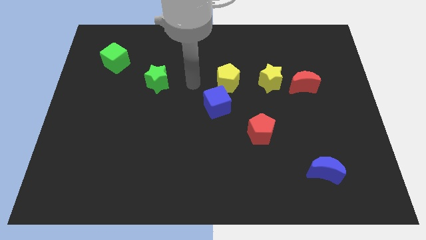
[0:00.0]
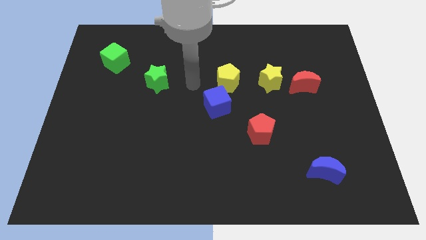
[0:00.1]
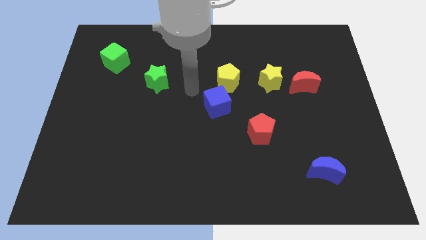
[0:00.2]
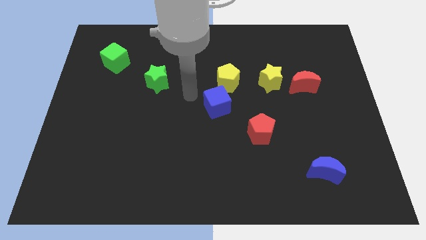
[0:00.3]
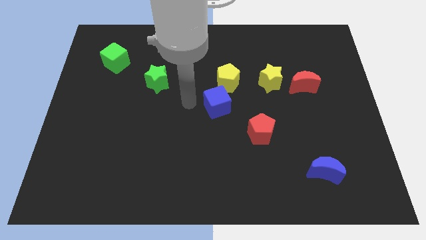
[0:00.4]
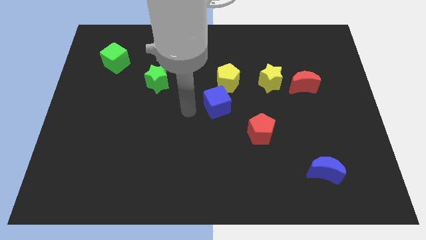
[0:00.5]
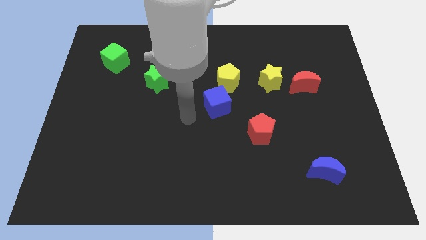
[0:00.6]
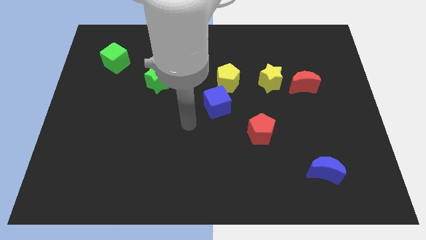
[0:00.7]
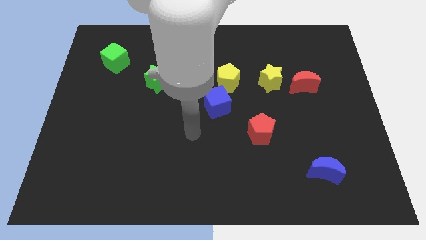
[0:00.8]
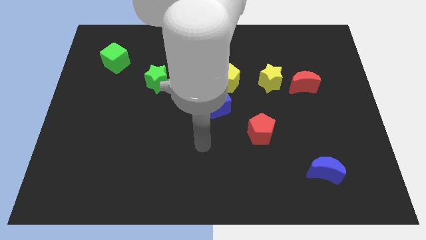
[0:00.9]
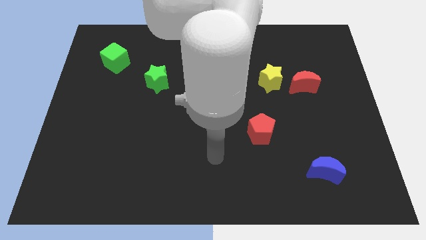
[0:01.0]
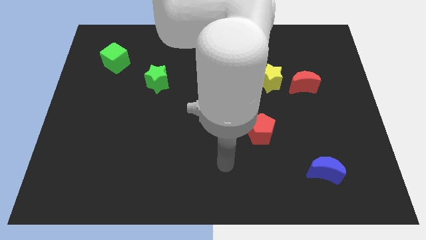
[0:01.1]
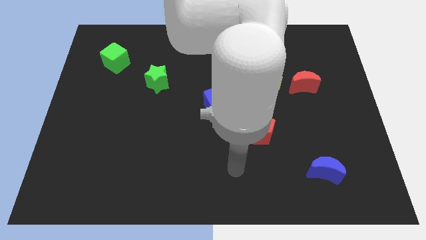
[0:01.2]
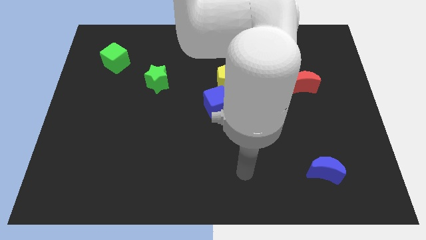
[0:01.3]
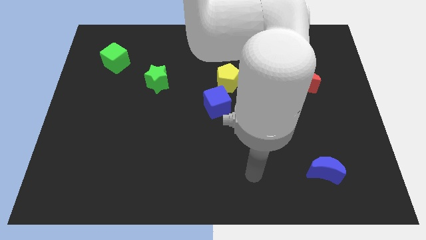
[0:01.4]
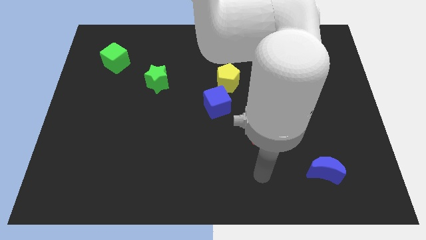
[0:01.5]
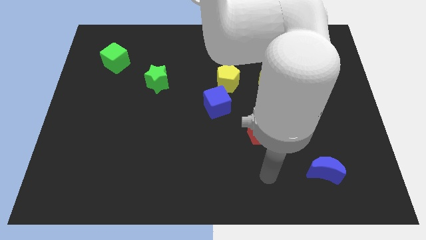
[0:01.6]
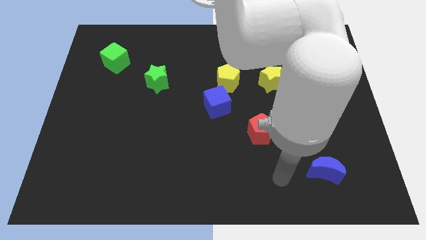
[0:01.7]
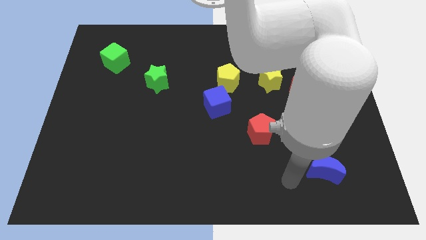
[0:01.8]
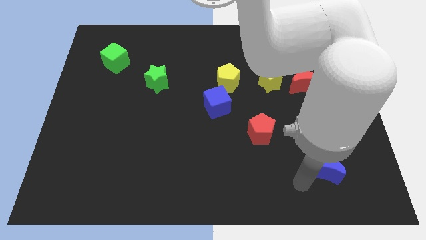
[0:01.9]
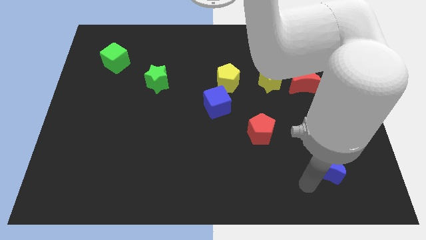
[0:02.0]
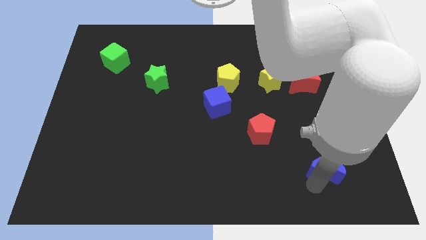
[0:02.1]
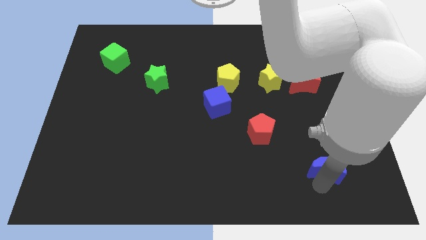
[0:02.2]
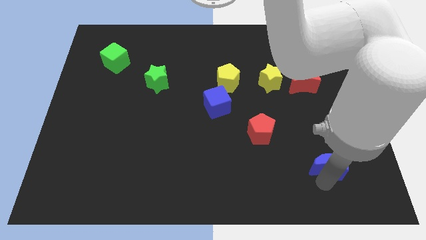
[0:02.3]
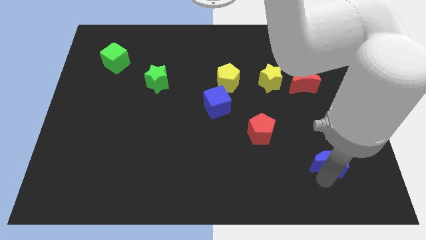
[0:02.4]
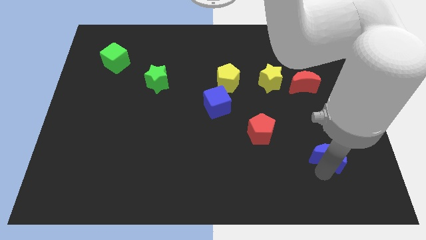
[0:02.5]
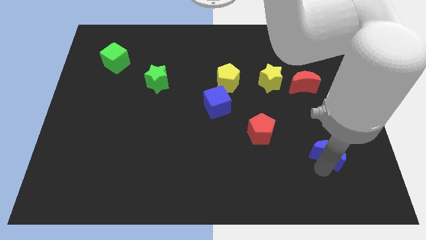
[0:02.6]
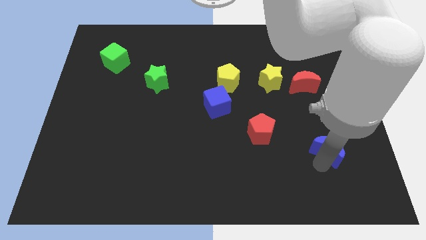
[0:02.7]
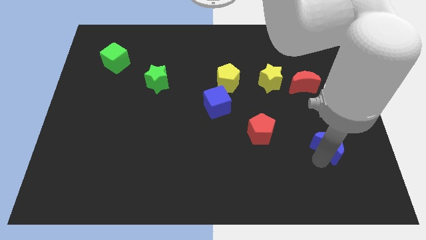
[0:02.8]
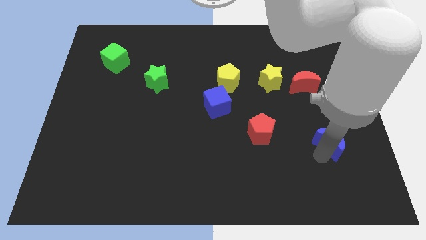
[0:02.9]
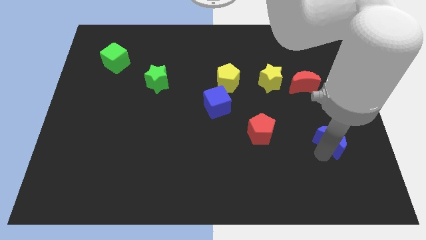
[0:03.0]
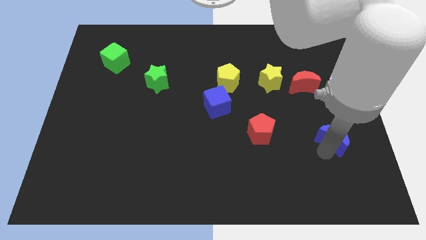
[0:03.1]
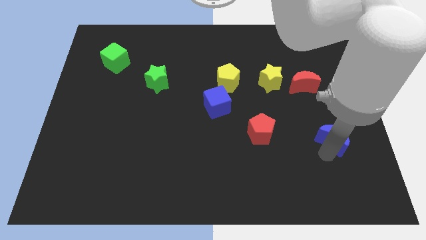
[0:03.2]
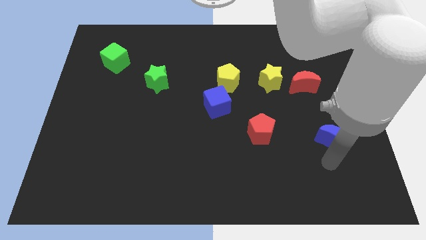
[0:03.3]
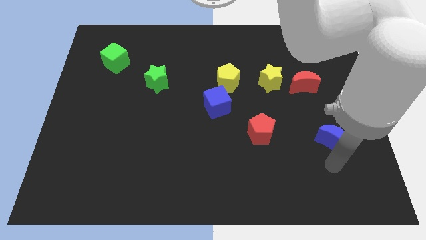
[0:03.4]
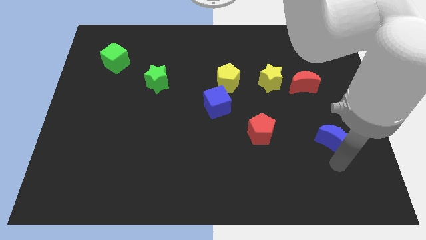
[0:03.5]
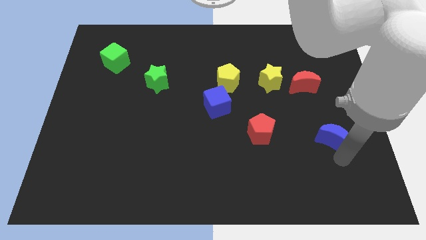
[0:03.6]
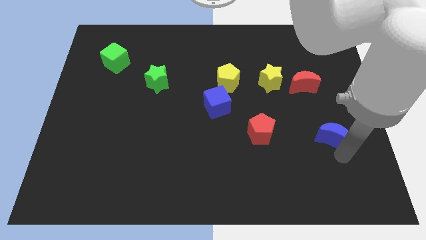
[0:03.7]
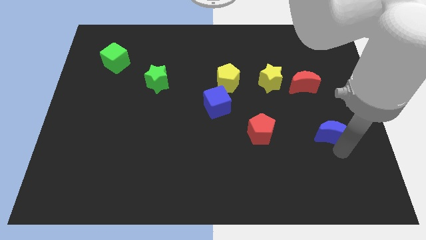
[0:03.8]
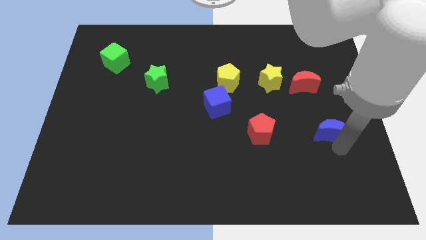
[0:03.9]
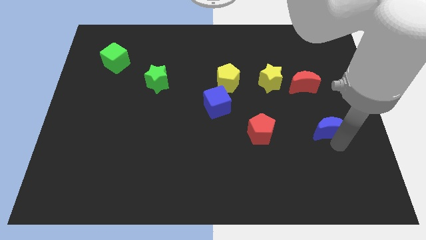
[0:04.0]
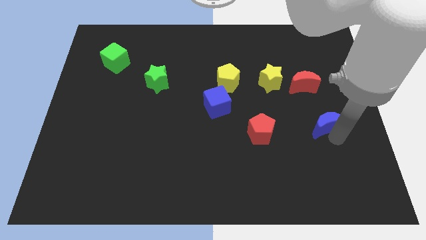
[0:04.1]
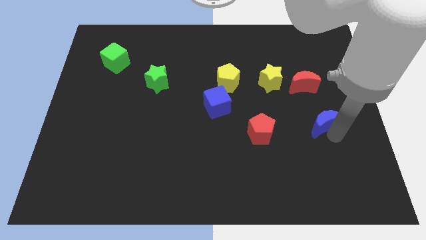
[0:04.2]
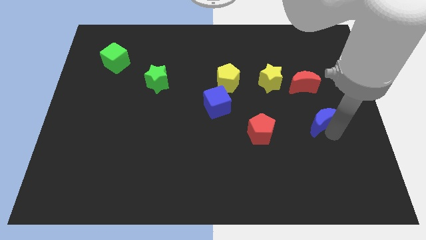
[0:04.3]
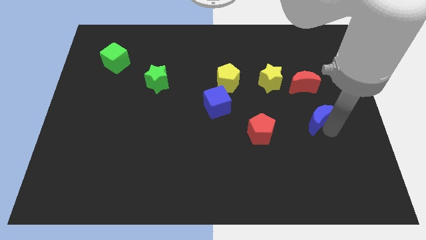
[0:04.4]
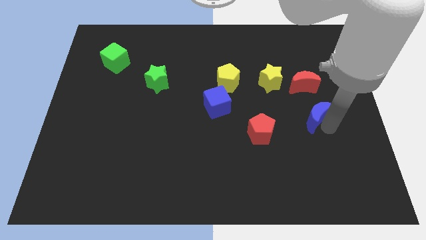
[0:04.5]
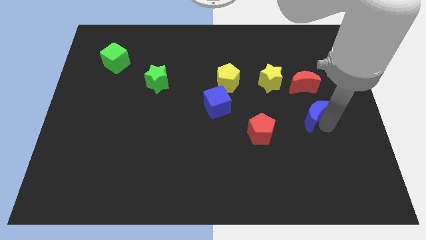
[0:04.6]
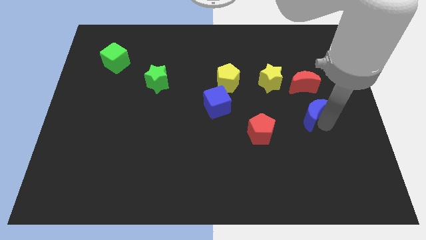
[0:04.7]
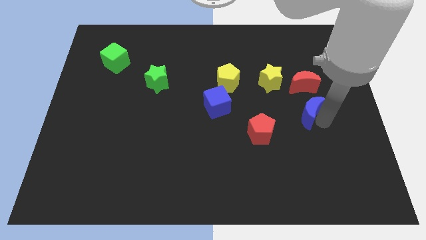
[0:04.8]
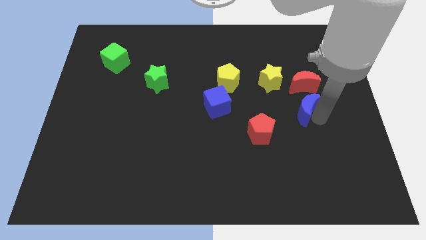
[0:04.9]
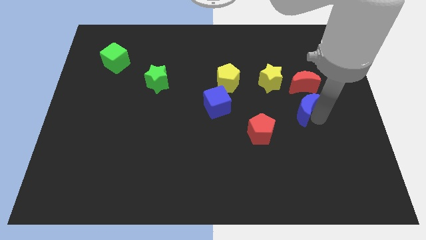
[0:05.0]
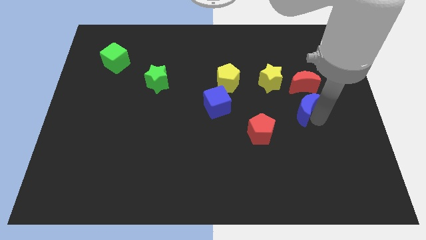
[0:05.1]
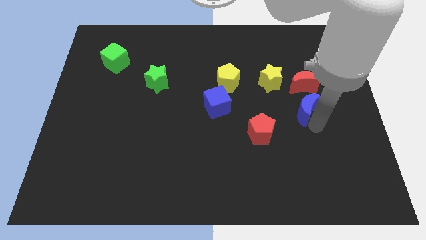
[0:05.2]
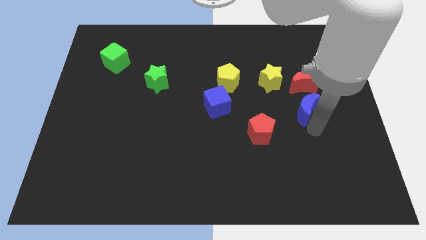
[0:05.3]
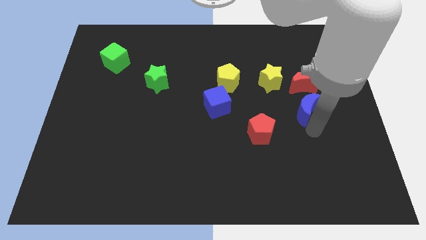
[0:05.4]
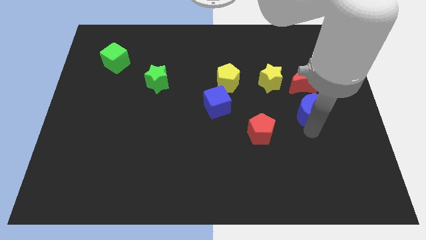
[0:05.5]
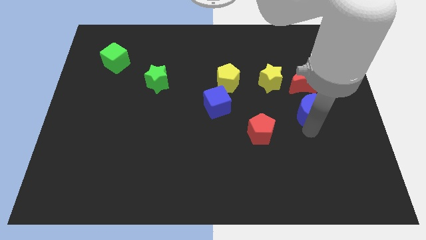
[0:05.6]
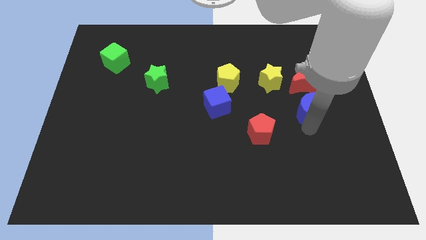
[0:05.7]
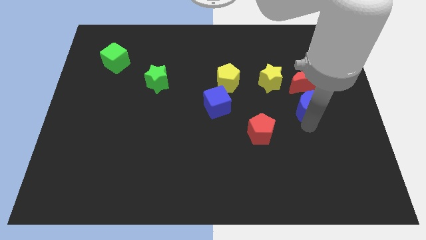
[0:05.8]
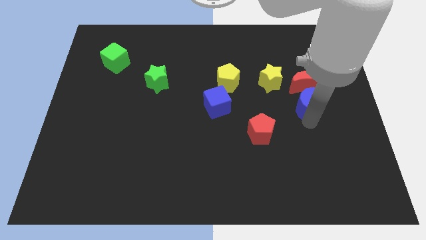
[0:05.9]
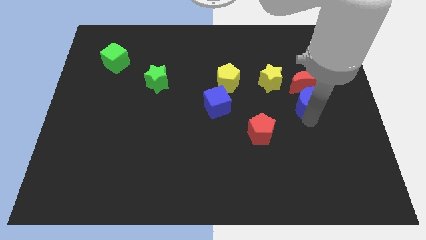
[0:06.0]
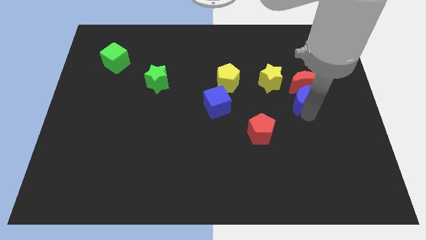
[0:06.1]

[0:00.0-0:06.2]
put the blue moon to the red moon

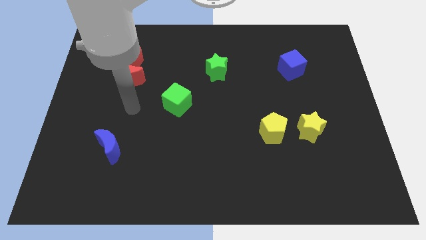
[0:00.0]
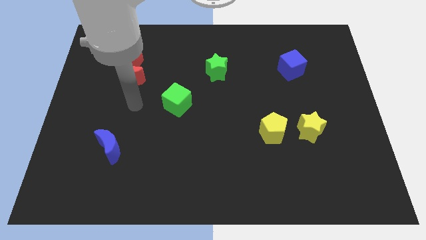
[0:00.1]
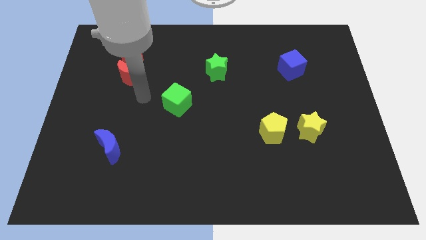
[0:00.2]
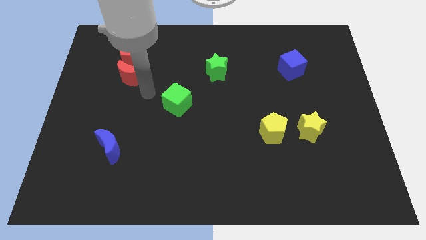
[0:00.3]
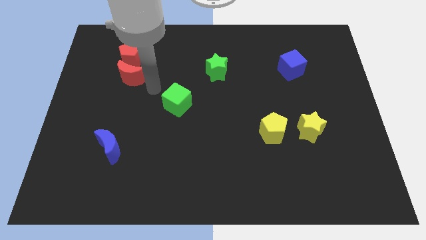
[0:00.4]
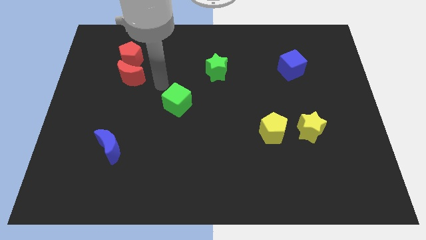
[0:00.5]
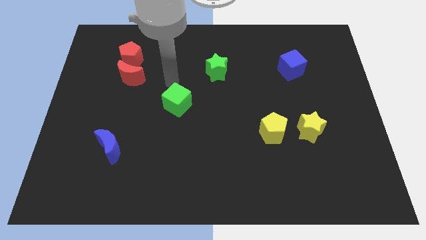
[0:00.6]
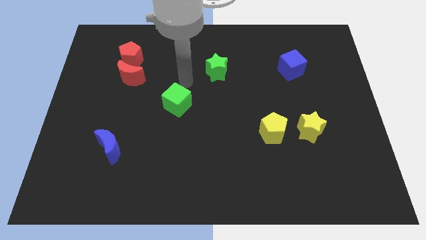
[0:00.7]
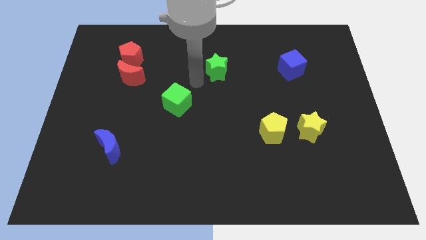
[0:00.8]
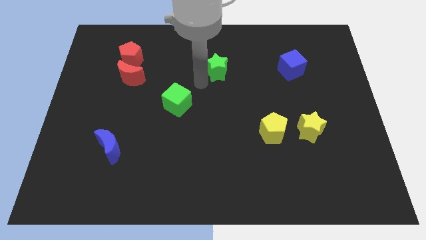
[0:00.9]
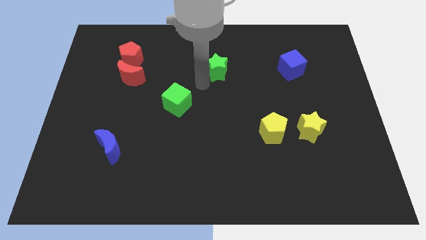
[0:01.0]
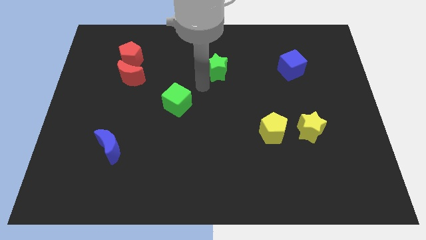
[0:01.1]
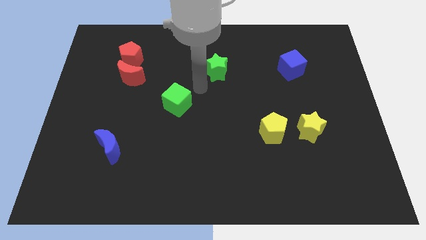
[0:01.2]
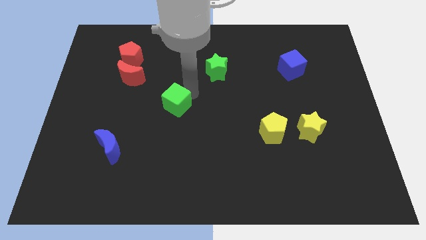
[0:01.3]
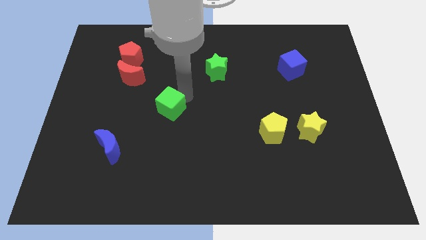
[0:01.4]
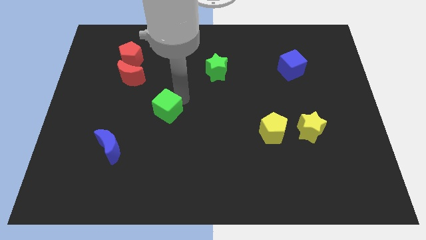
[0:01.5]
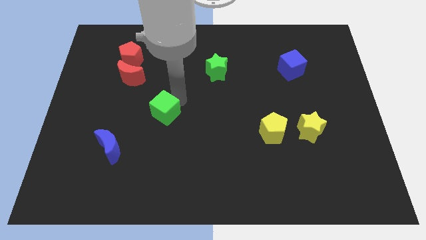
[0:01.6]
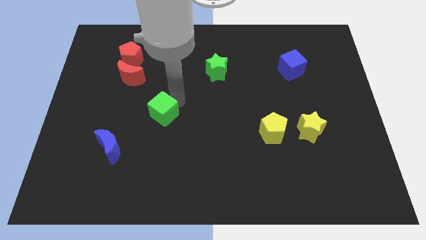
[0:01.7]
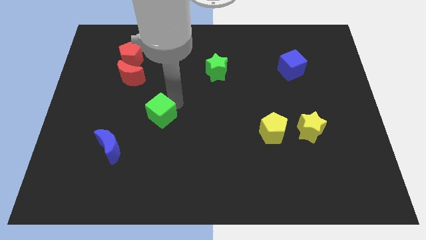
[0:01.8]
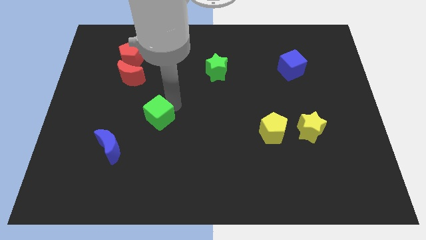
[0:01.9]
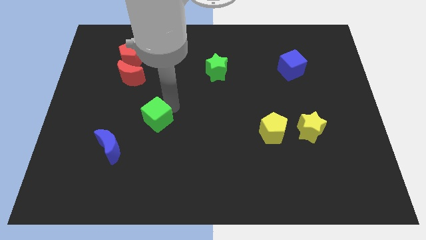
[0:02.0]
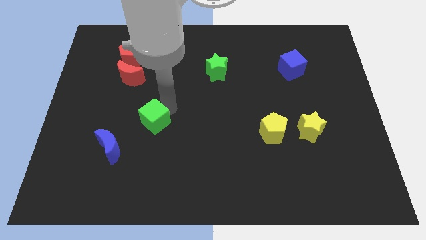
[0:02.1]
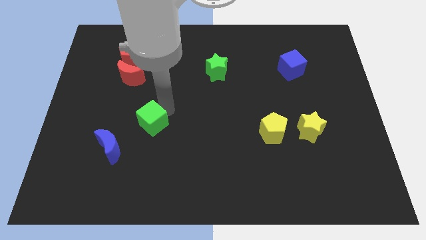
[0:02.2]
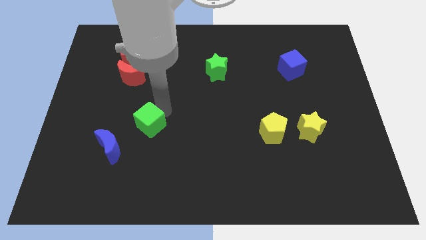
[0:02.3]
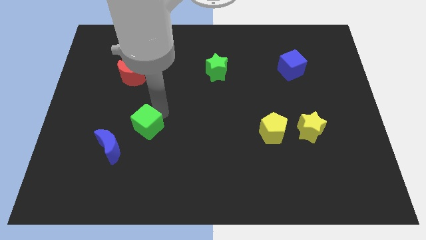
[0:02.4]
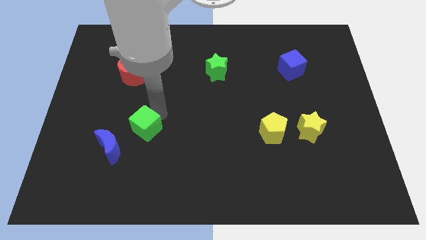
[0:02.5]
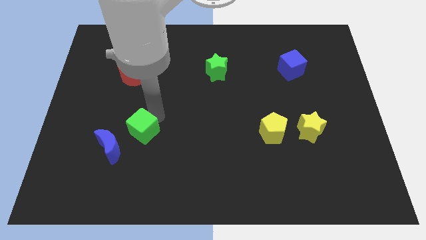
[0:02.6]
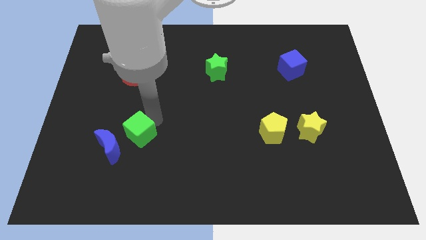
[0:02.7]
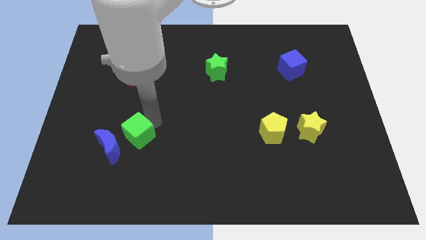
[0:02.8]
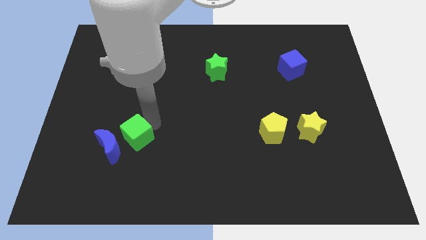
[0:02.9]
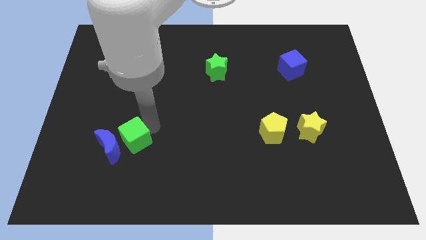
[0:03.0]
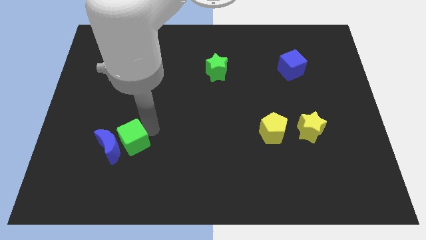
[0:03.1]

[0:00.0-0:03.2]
put the green cube next to the blue moon
